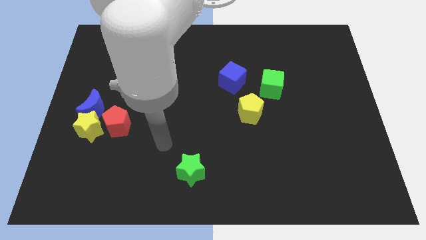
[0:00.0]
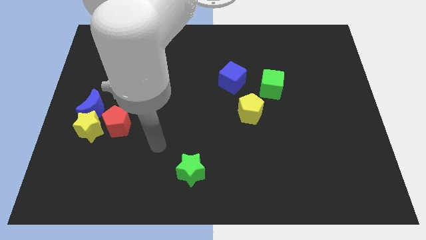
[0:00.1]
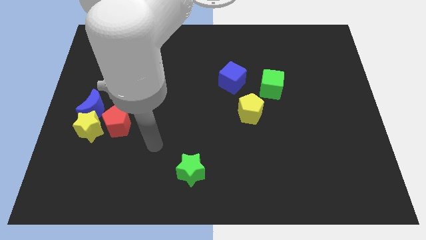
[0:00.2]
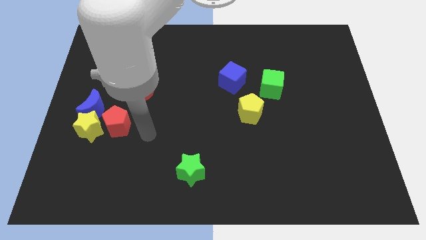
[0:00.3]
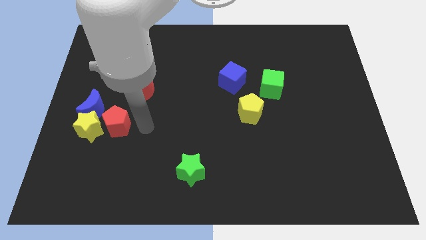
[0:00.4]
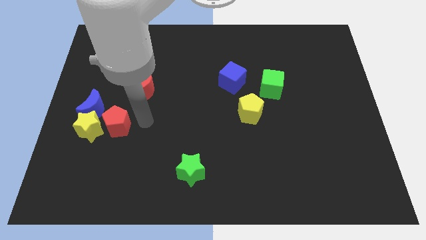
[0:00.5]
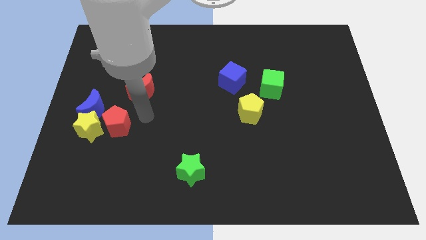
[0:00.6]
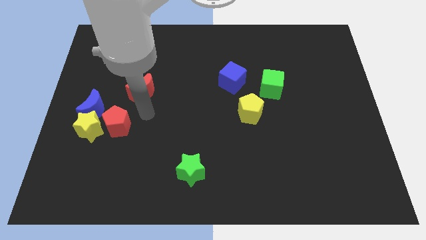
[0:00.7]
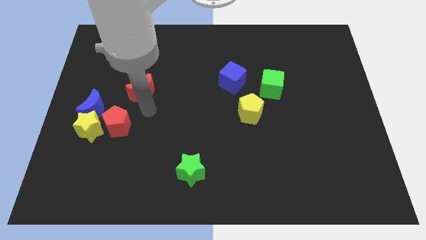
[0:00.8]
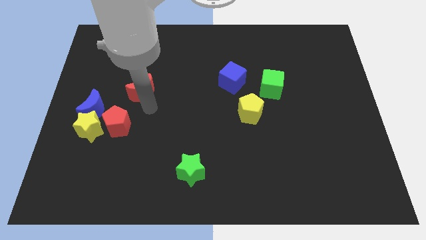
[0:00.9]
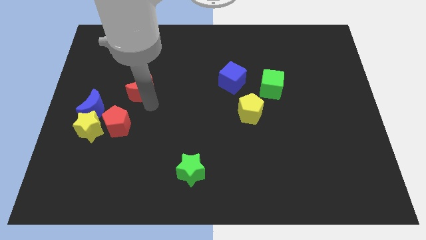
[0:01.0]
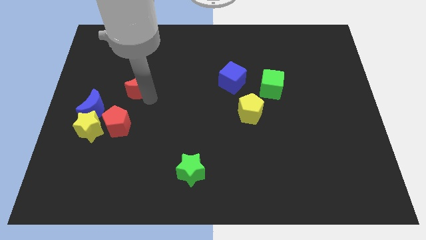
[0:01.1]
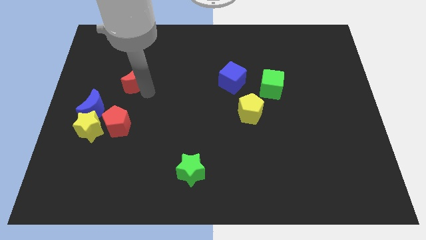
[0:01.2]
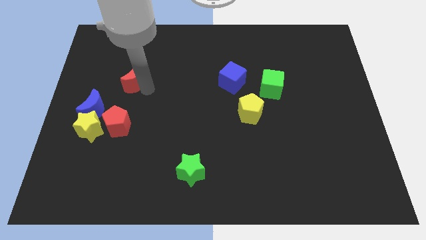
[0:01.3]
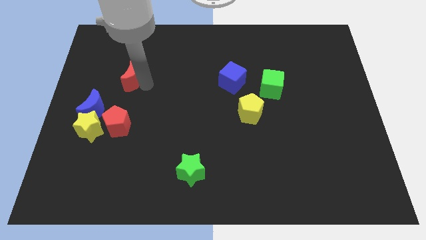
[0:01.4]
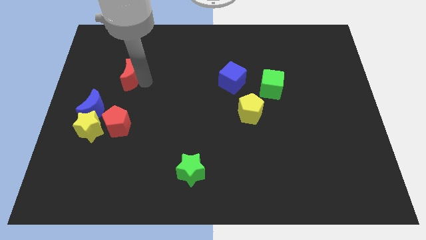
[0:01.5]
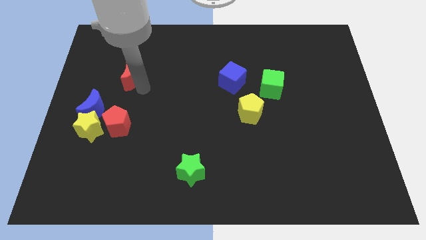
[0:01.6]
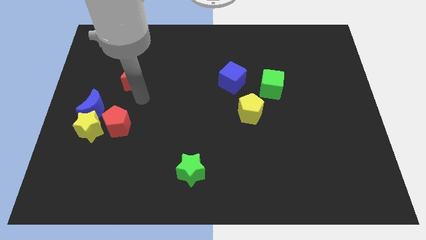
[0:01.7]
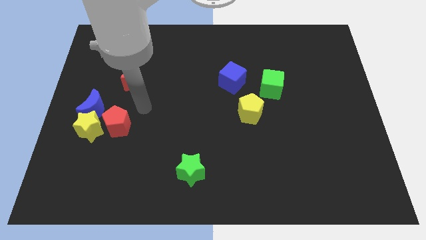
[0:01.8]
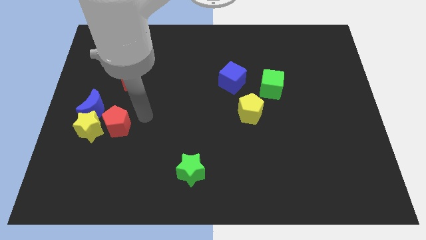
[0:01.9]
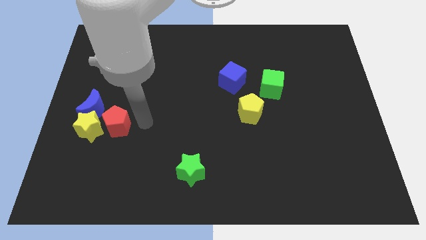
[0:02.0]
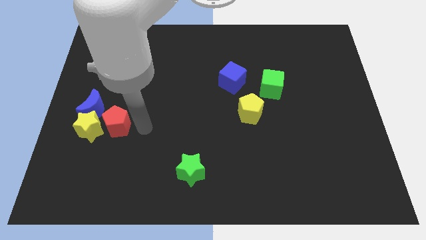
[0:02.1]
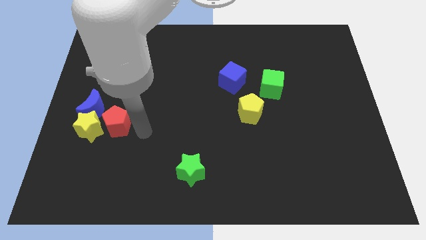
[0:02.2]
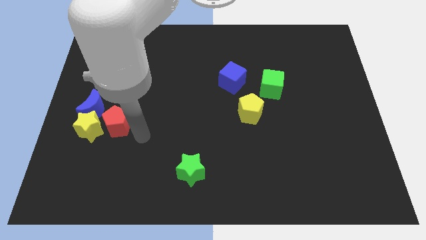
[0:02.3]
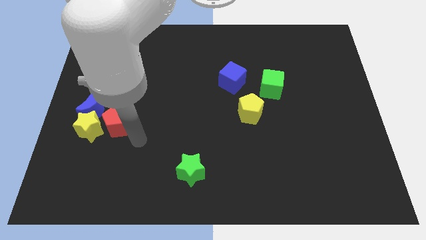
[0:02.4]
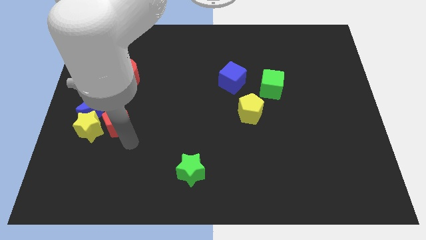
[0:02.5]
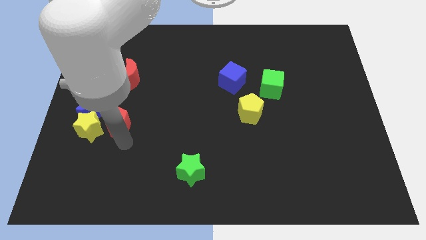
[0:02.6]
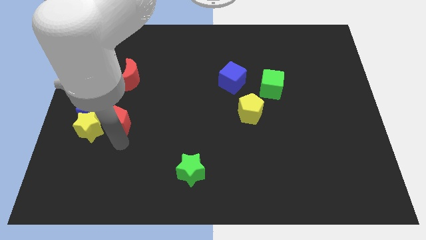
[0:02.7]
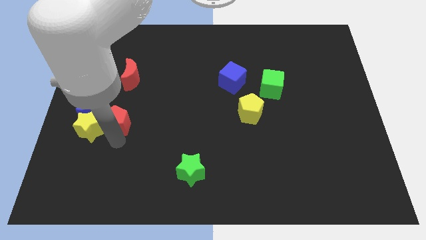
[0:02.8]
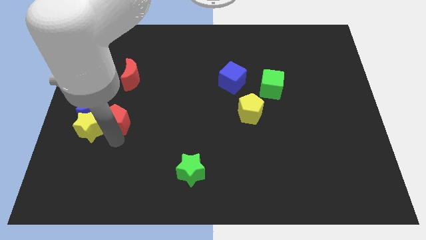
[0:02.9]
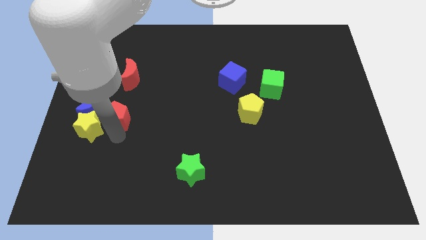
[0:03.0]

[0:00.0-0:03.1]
move the red moon to the top side of the red pentagon

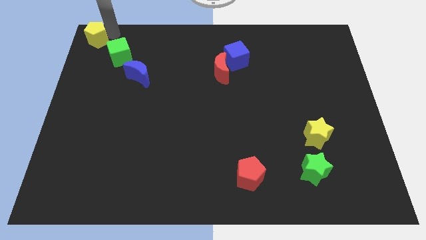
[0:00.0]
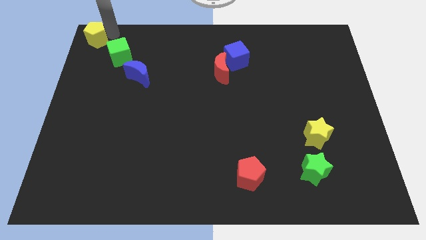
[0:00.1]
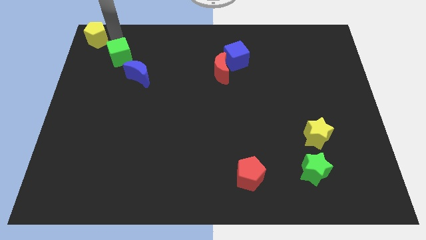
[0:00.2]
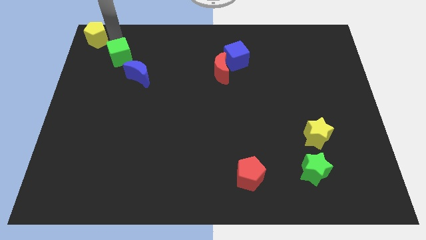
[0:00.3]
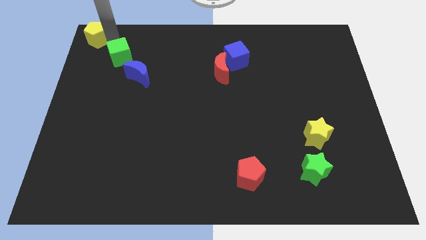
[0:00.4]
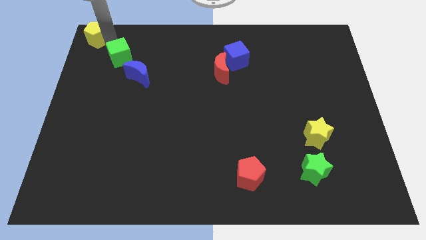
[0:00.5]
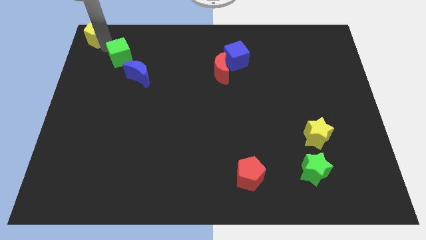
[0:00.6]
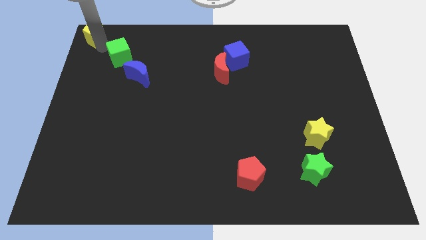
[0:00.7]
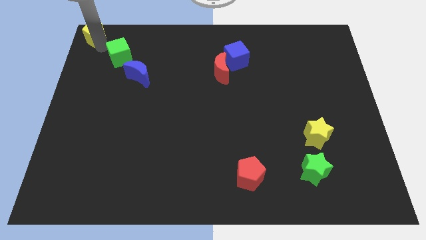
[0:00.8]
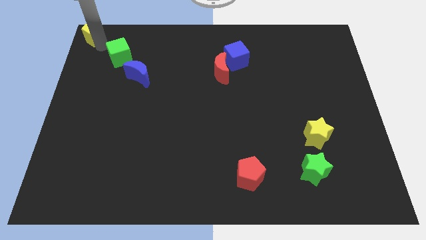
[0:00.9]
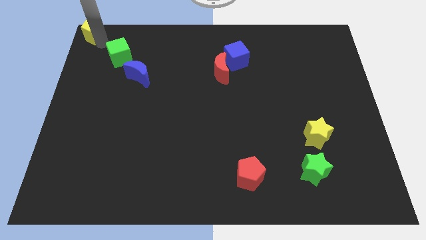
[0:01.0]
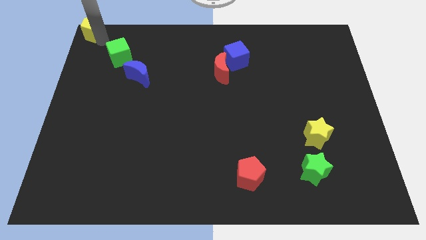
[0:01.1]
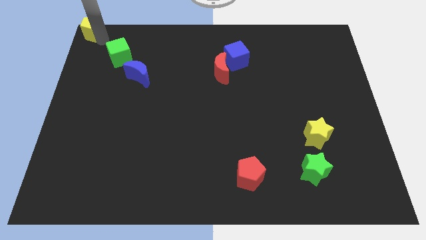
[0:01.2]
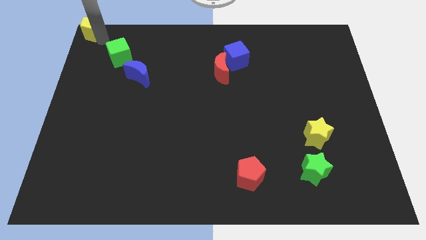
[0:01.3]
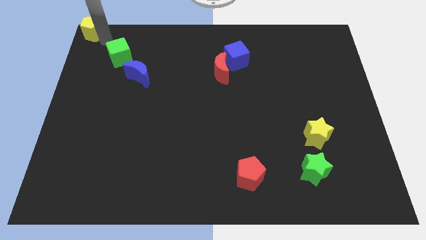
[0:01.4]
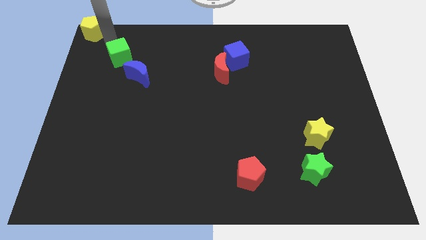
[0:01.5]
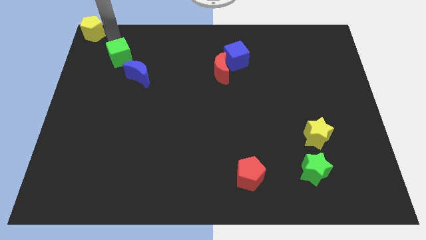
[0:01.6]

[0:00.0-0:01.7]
move the yellow pentagon to the top left corner of the board

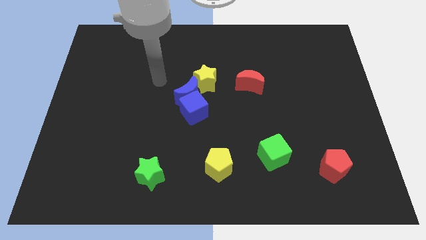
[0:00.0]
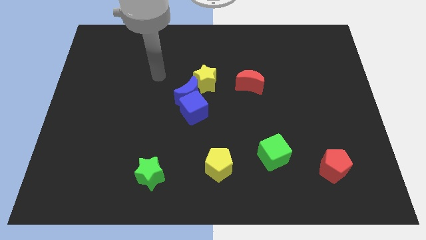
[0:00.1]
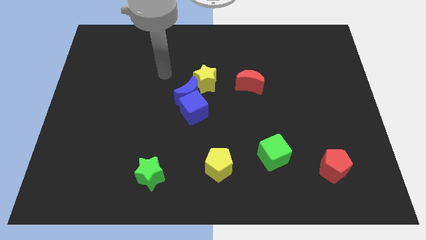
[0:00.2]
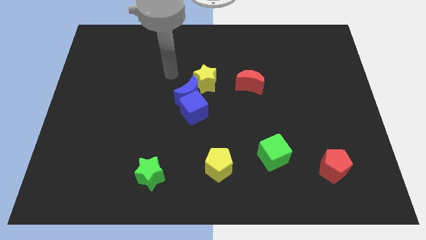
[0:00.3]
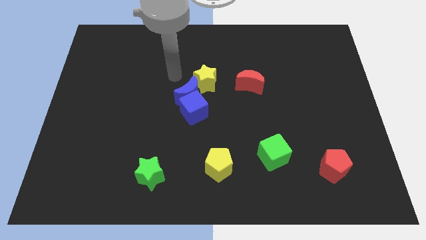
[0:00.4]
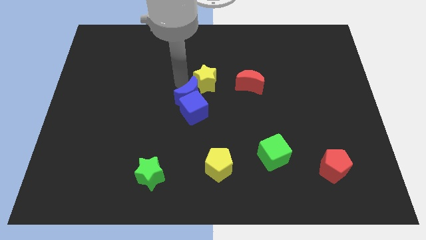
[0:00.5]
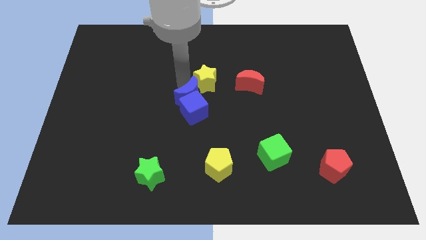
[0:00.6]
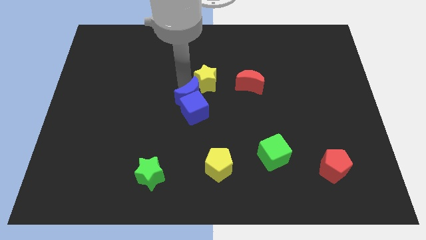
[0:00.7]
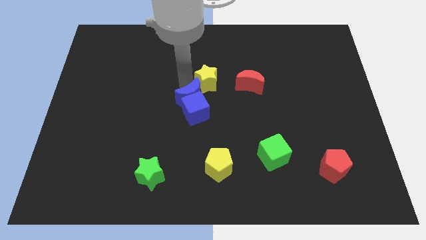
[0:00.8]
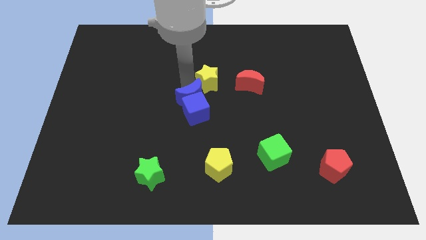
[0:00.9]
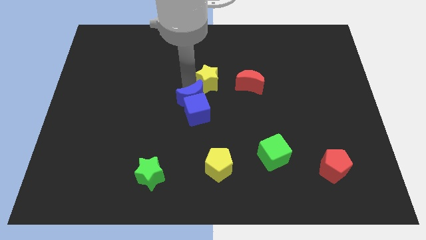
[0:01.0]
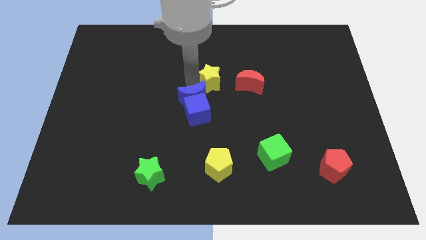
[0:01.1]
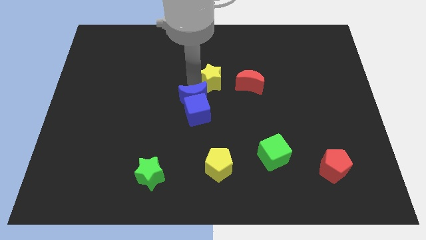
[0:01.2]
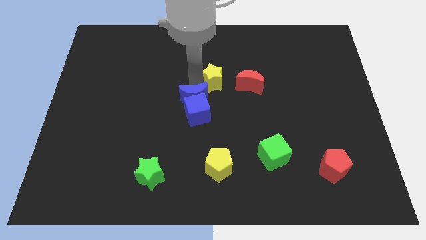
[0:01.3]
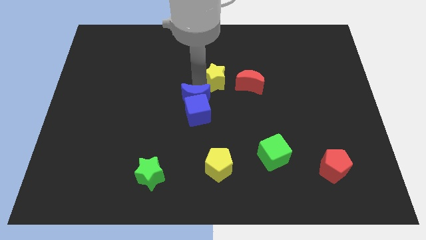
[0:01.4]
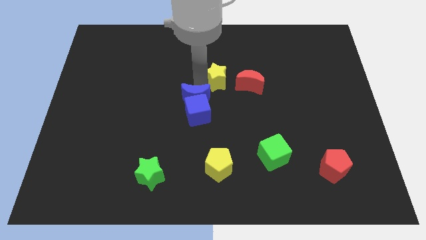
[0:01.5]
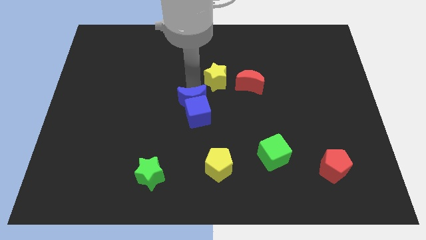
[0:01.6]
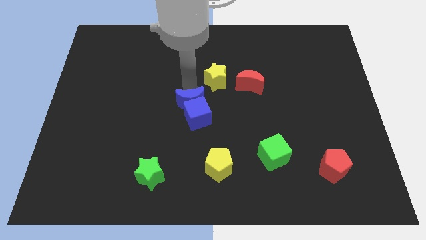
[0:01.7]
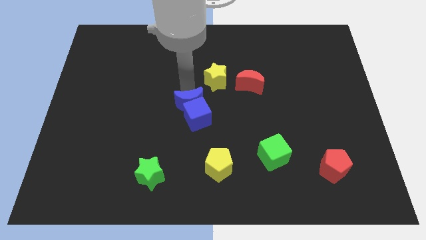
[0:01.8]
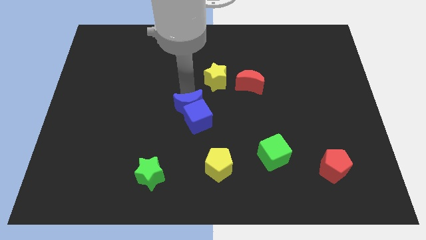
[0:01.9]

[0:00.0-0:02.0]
separate the blue moon and yellow star

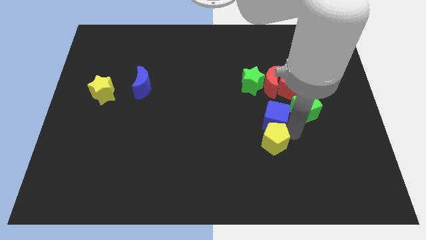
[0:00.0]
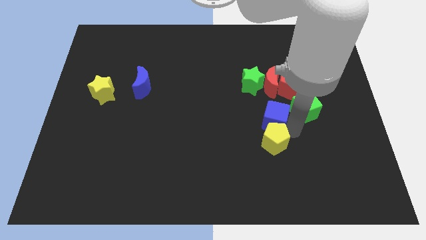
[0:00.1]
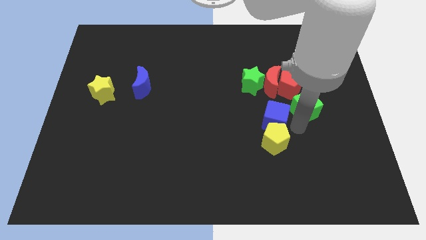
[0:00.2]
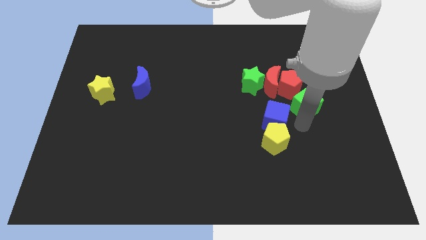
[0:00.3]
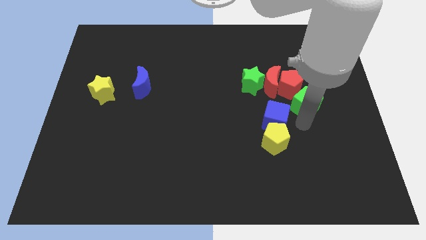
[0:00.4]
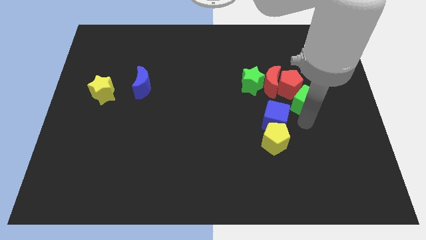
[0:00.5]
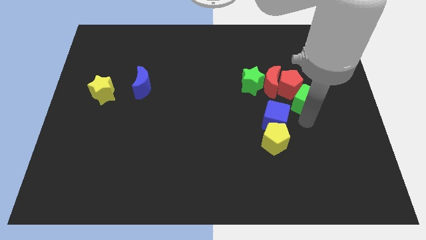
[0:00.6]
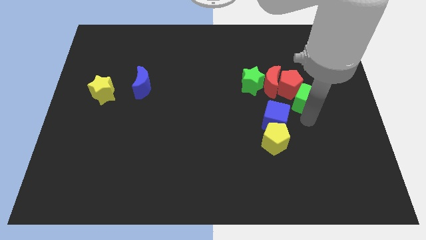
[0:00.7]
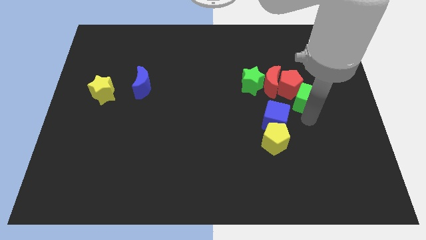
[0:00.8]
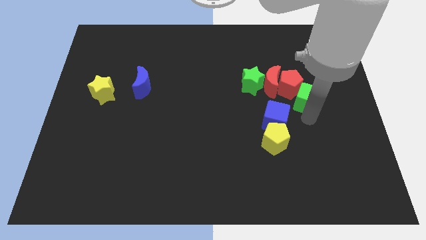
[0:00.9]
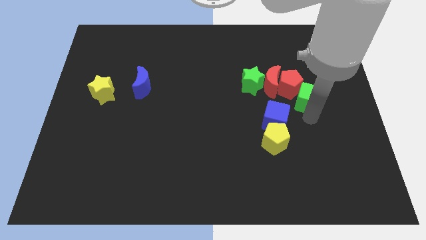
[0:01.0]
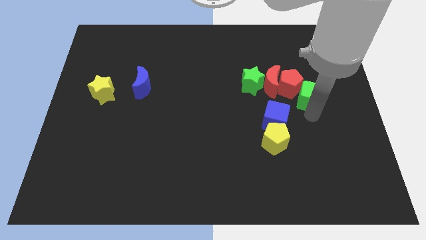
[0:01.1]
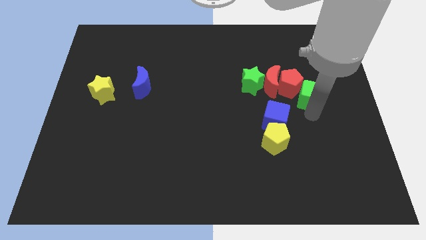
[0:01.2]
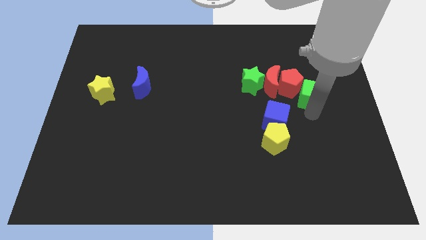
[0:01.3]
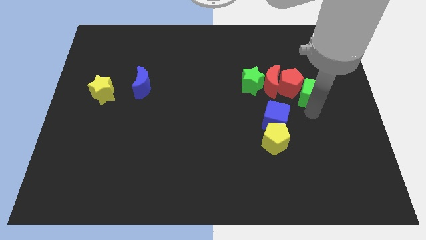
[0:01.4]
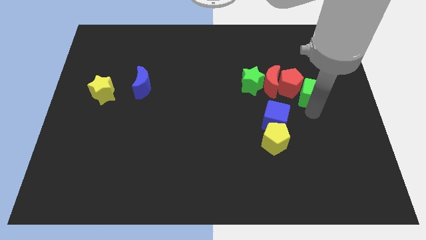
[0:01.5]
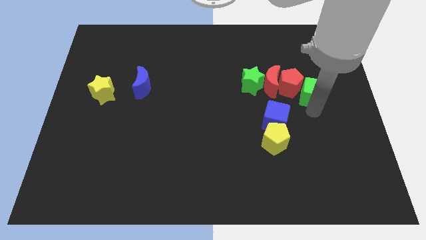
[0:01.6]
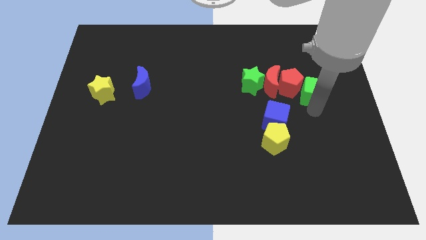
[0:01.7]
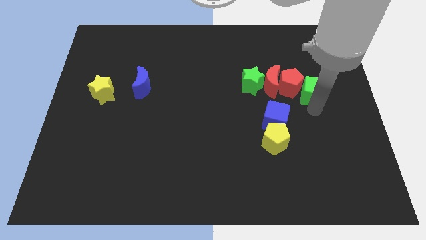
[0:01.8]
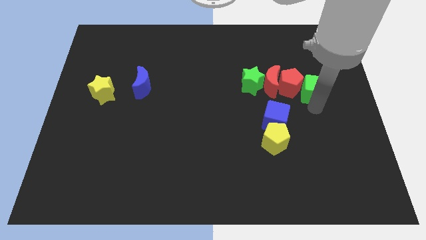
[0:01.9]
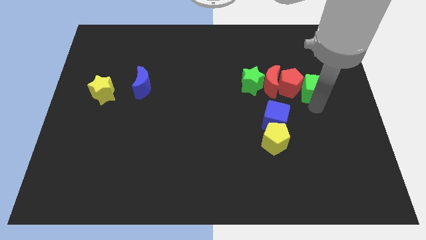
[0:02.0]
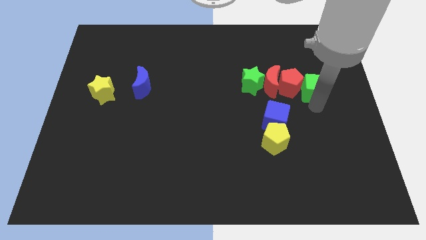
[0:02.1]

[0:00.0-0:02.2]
place the green cube right to the red pentagon

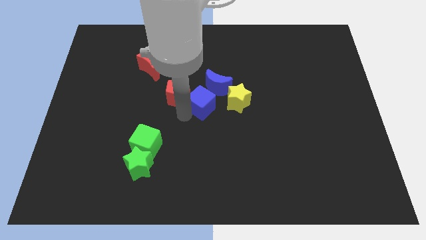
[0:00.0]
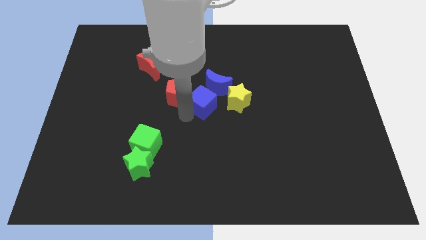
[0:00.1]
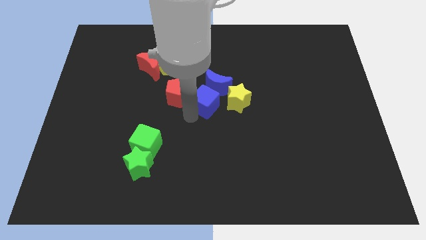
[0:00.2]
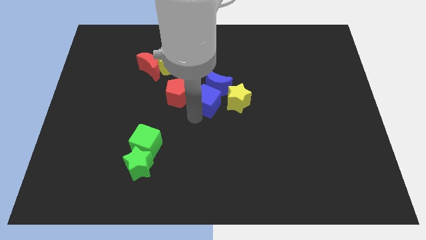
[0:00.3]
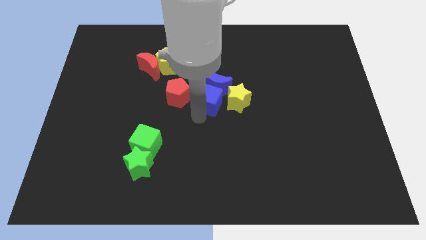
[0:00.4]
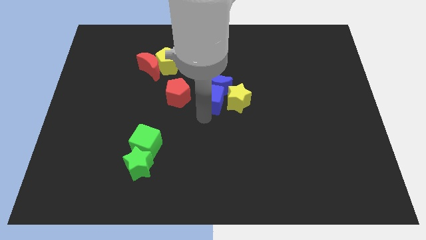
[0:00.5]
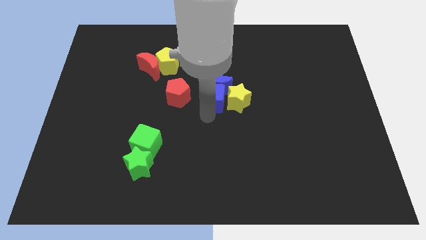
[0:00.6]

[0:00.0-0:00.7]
place blue cube close to the yellow star
